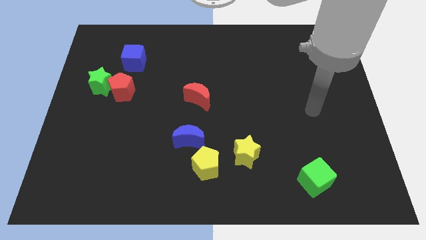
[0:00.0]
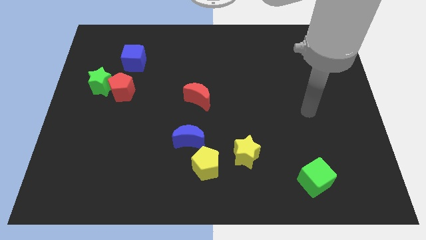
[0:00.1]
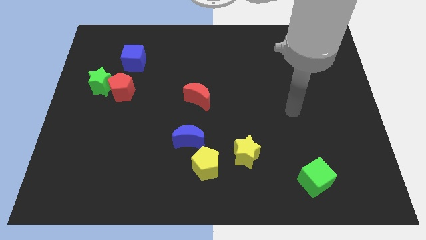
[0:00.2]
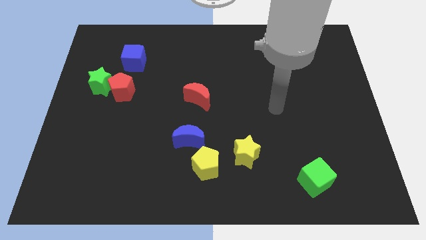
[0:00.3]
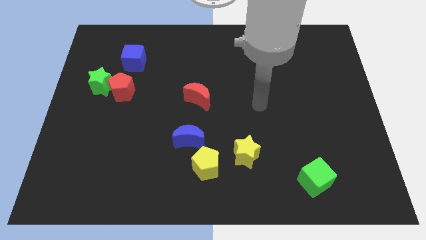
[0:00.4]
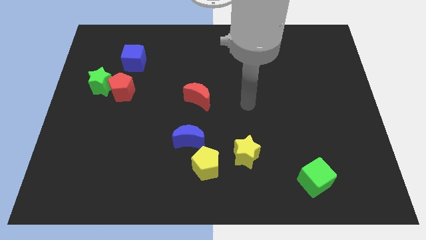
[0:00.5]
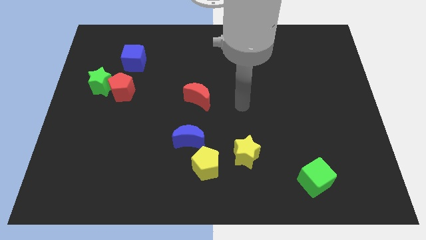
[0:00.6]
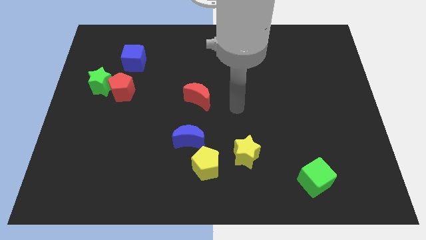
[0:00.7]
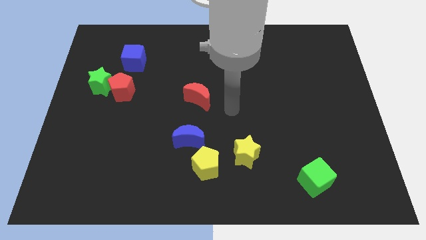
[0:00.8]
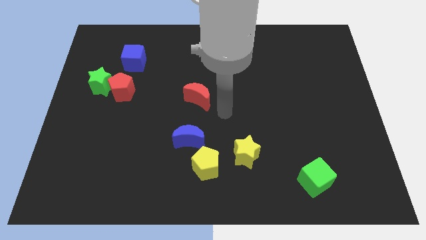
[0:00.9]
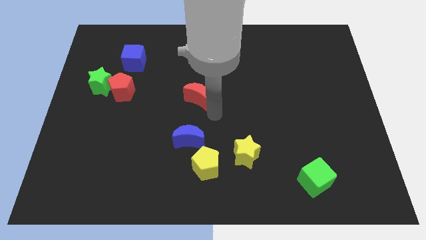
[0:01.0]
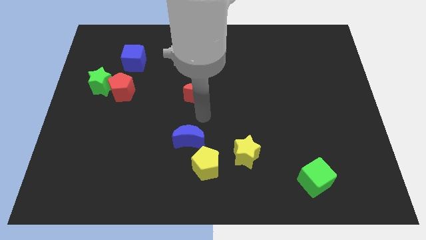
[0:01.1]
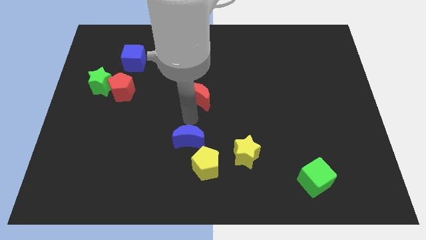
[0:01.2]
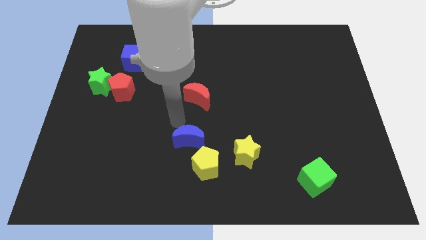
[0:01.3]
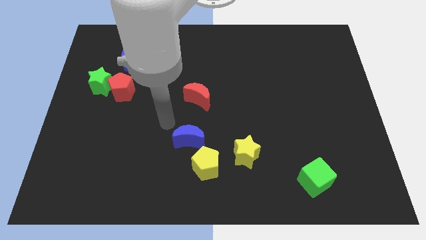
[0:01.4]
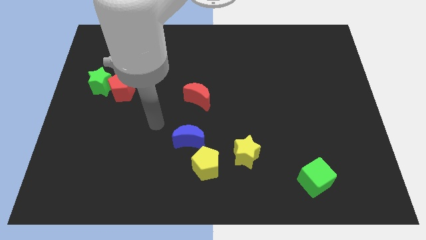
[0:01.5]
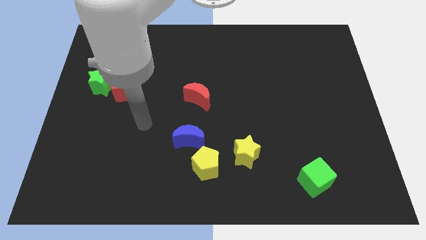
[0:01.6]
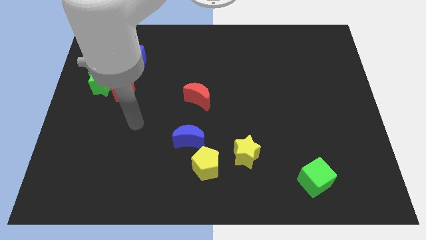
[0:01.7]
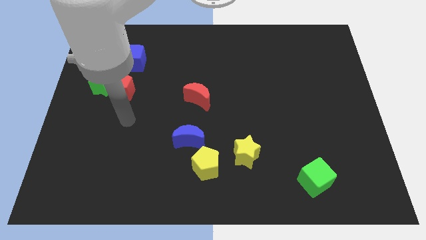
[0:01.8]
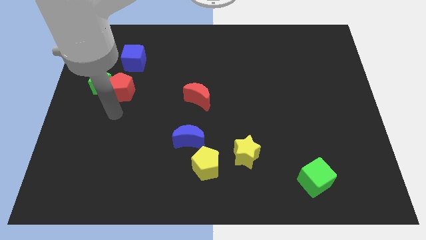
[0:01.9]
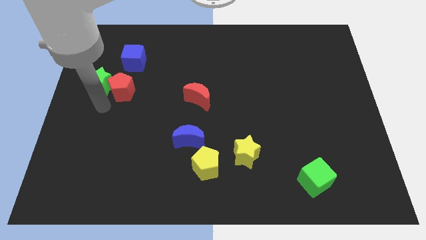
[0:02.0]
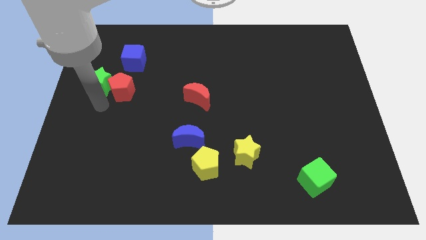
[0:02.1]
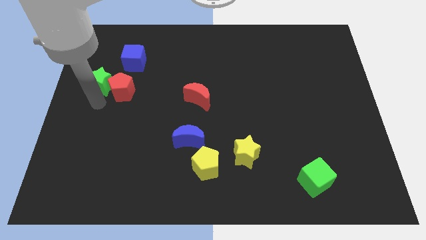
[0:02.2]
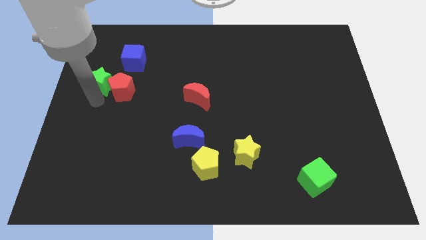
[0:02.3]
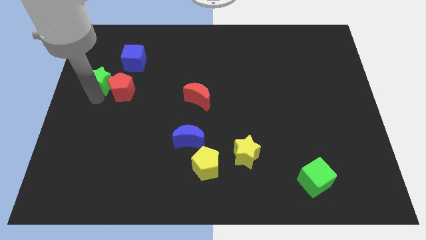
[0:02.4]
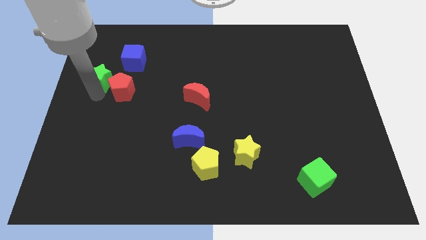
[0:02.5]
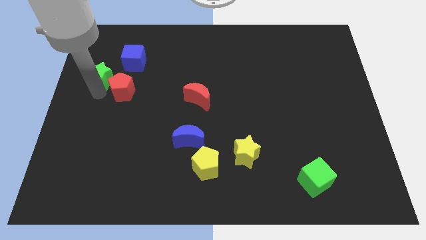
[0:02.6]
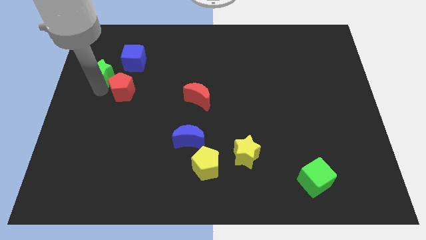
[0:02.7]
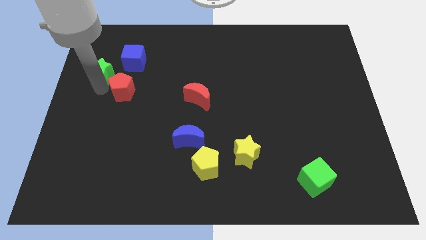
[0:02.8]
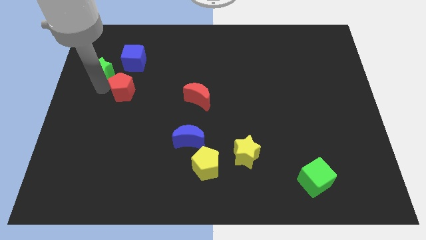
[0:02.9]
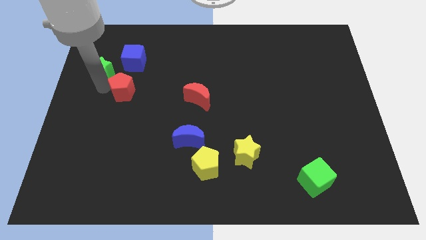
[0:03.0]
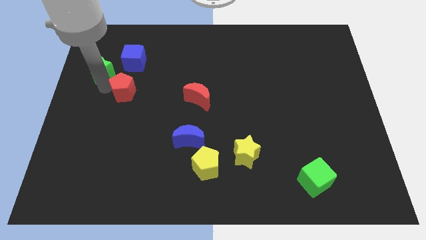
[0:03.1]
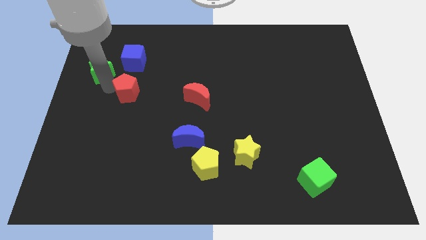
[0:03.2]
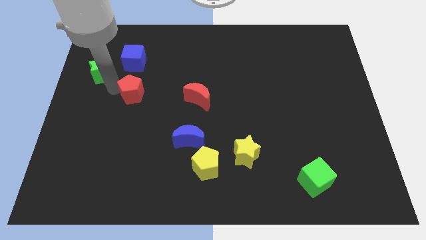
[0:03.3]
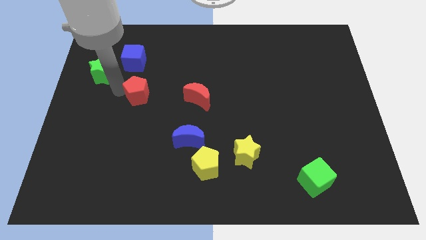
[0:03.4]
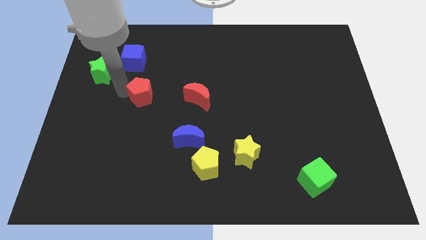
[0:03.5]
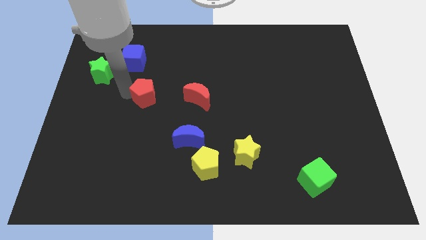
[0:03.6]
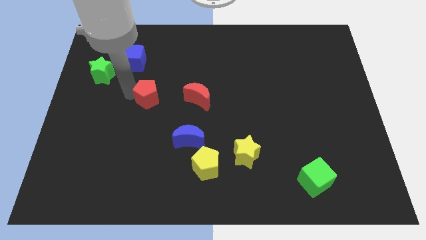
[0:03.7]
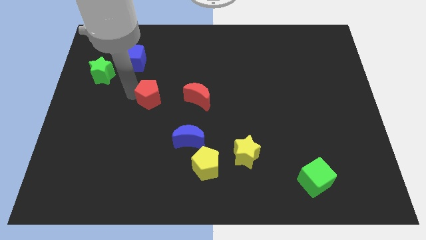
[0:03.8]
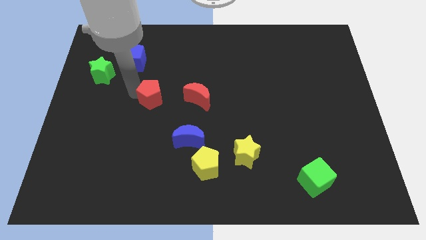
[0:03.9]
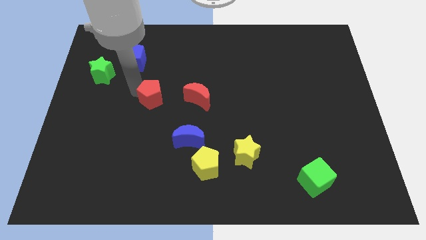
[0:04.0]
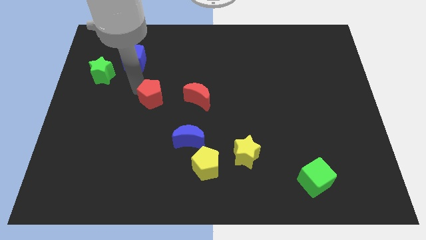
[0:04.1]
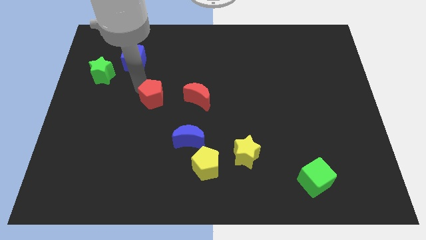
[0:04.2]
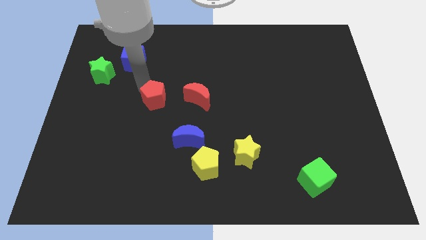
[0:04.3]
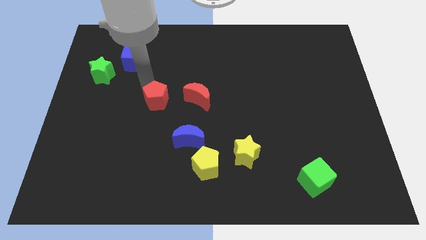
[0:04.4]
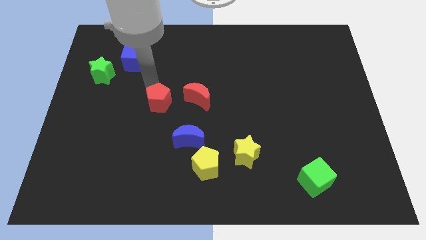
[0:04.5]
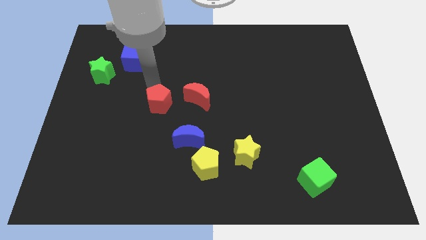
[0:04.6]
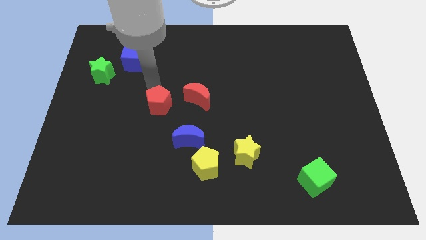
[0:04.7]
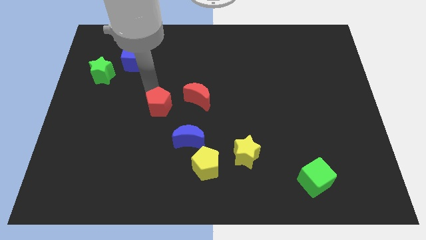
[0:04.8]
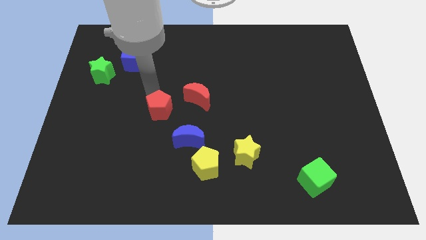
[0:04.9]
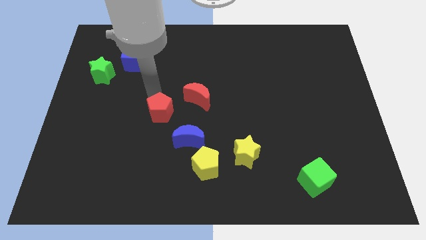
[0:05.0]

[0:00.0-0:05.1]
place the red pentagon to the right side of the red moon

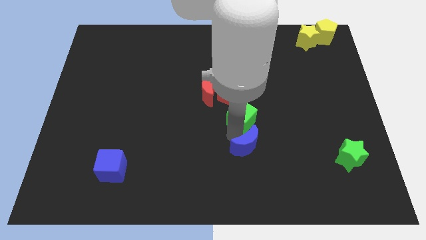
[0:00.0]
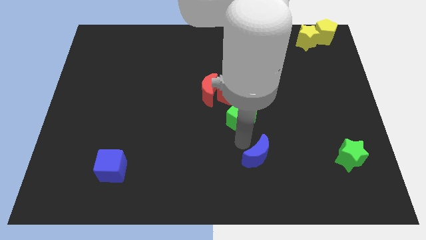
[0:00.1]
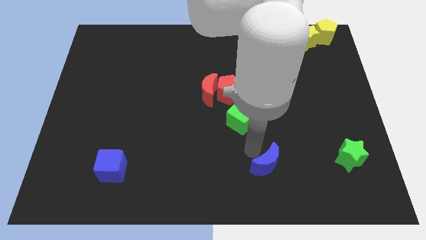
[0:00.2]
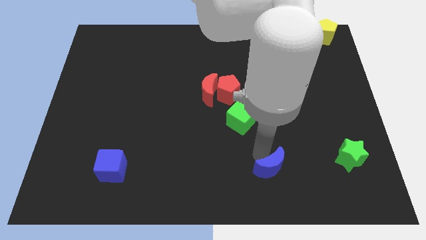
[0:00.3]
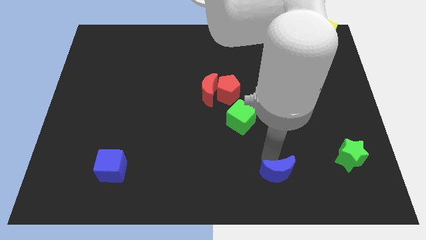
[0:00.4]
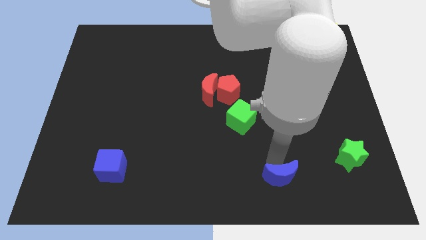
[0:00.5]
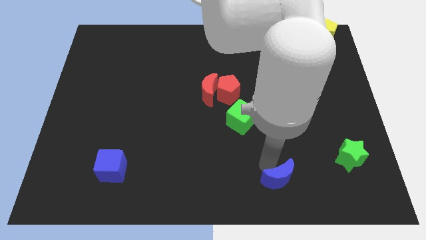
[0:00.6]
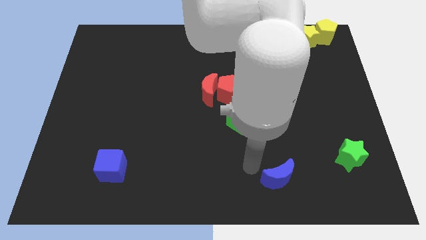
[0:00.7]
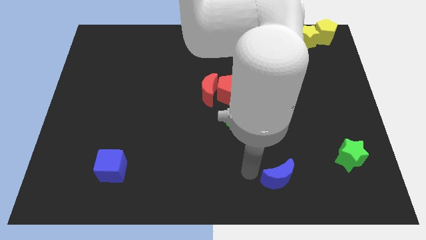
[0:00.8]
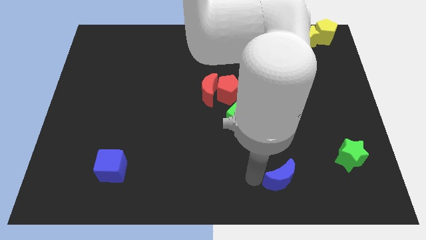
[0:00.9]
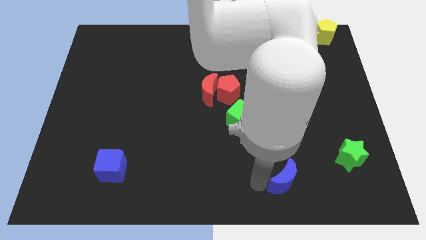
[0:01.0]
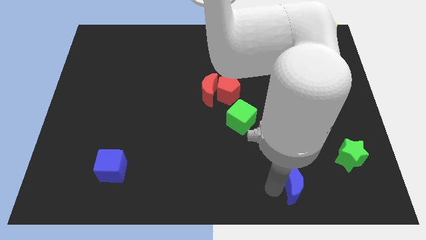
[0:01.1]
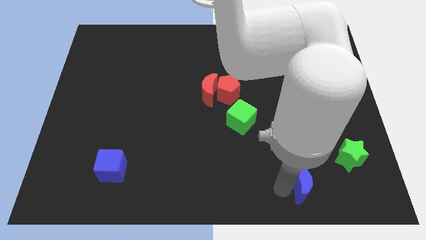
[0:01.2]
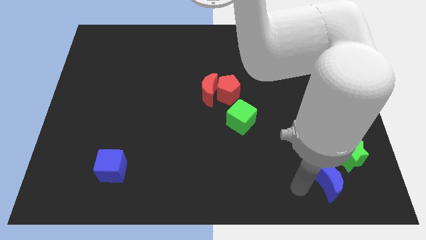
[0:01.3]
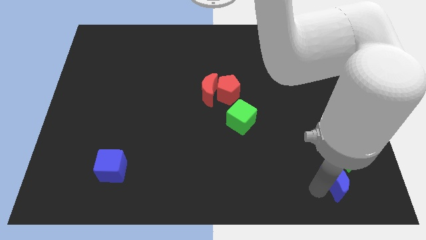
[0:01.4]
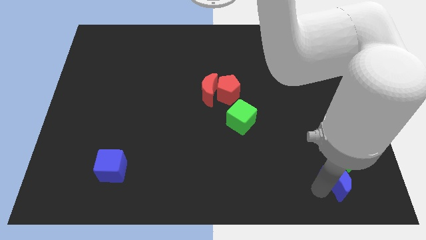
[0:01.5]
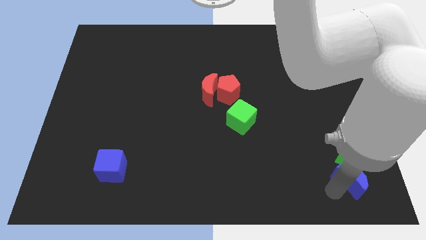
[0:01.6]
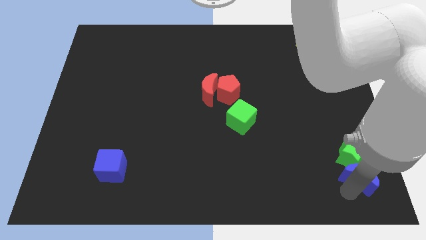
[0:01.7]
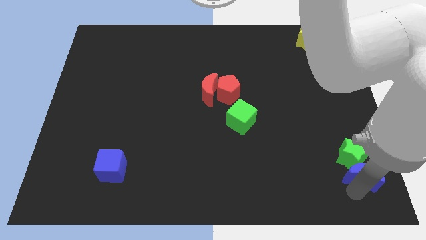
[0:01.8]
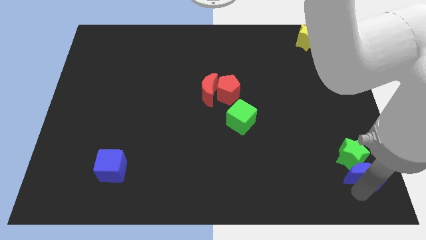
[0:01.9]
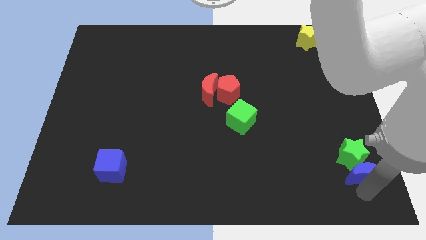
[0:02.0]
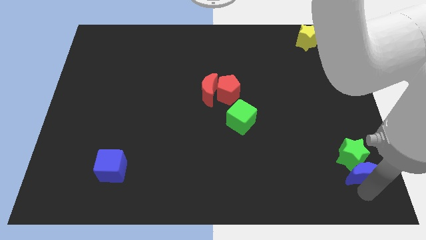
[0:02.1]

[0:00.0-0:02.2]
move the blue crescent below the green star at the bottom

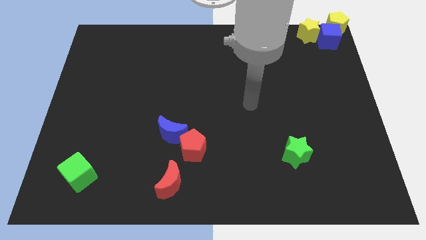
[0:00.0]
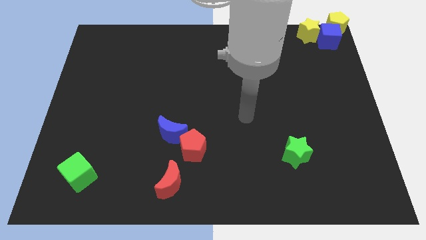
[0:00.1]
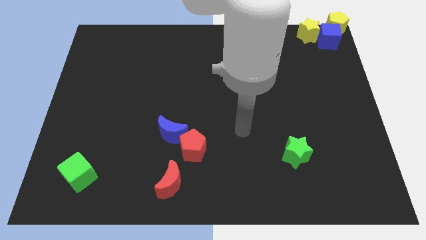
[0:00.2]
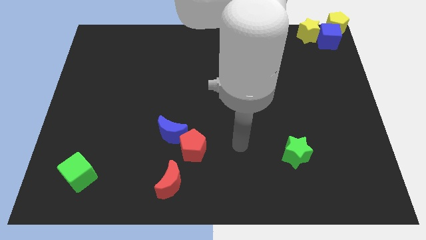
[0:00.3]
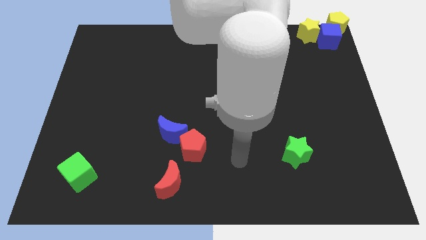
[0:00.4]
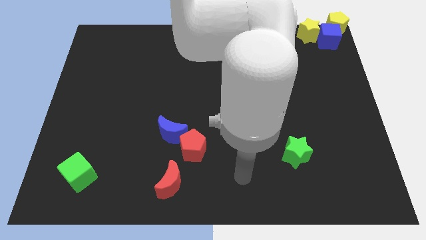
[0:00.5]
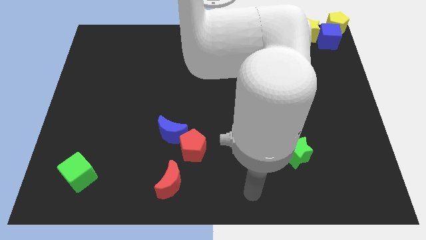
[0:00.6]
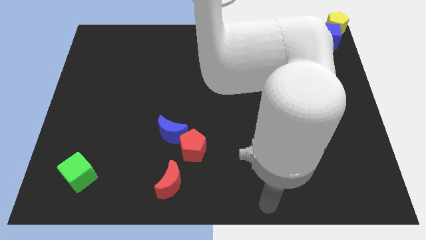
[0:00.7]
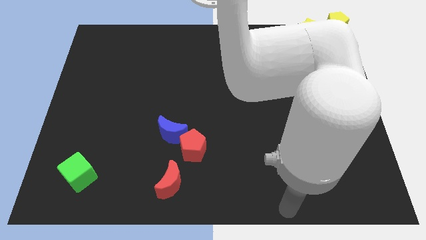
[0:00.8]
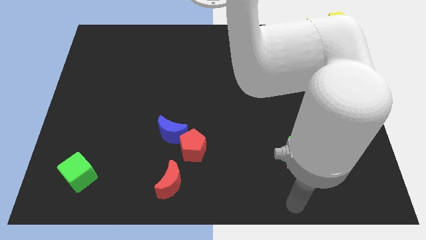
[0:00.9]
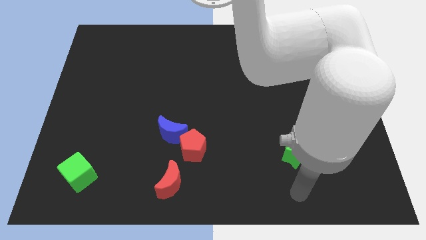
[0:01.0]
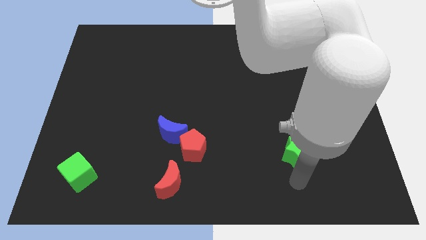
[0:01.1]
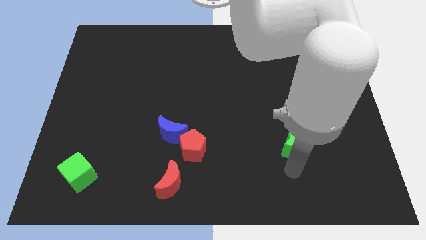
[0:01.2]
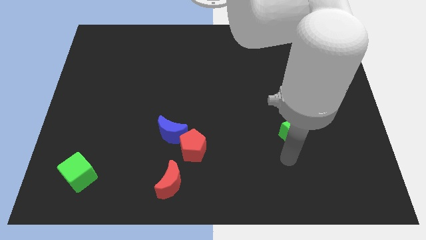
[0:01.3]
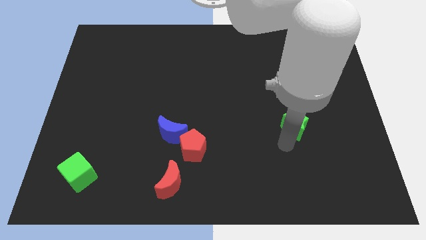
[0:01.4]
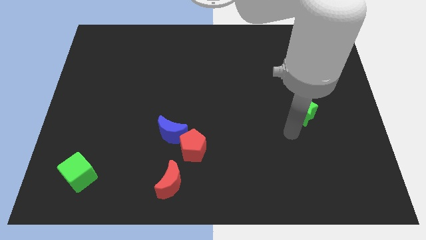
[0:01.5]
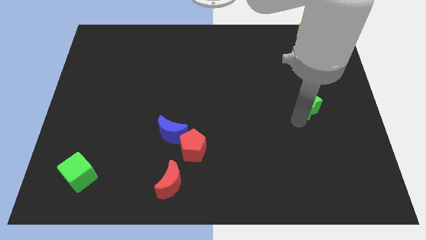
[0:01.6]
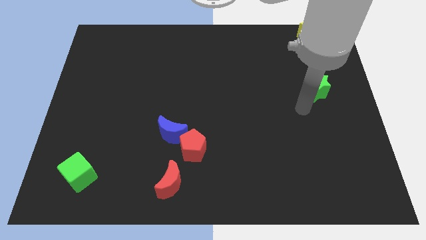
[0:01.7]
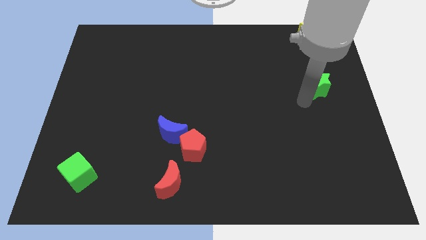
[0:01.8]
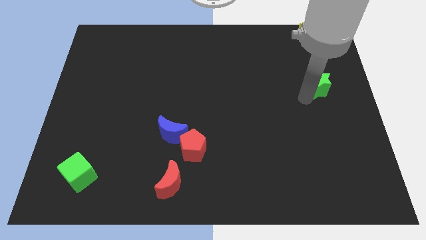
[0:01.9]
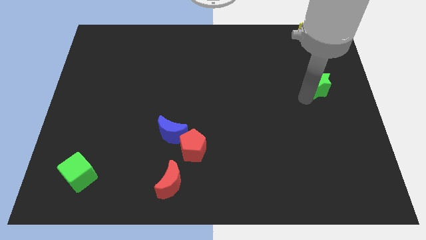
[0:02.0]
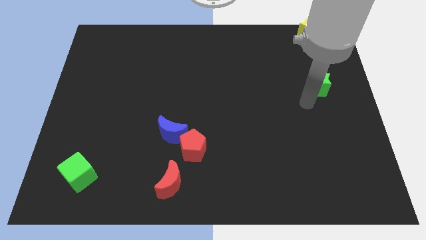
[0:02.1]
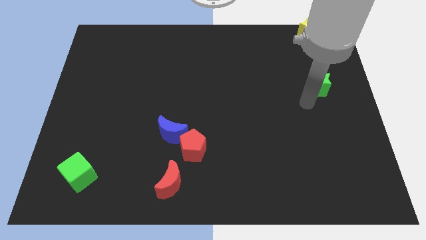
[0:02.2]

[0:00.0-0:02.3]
push green star upwards
